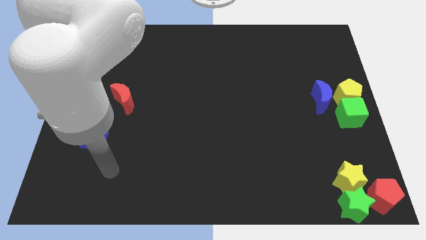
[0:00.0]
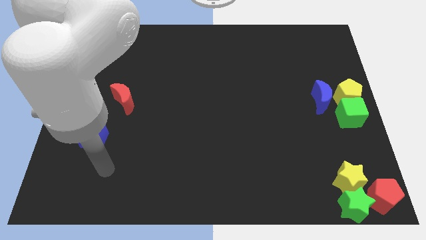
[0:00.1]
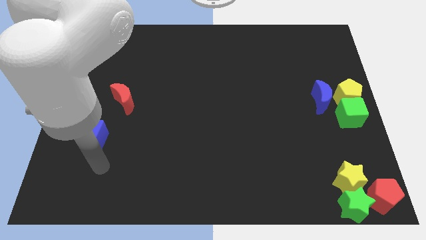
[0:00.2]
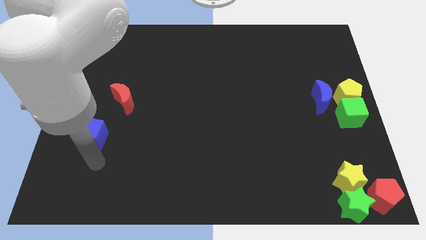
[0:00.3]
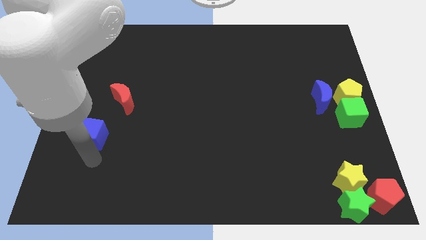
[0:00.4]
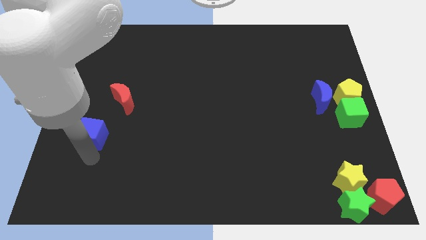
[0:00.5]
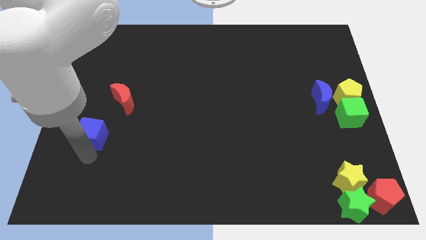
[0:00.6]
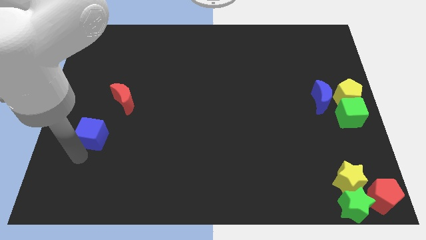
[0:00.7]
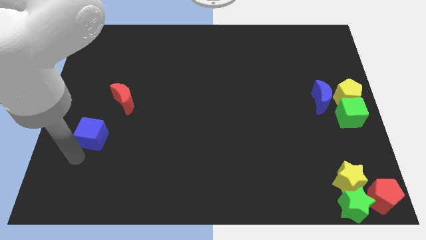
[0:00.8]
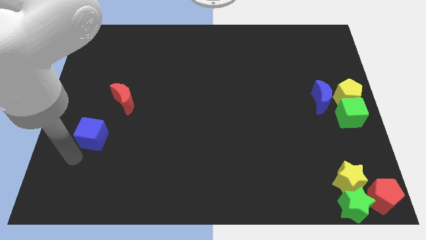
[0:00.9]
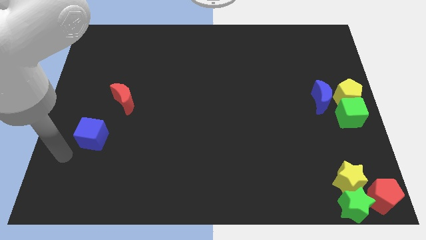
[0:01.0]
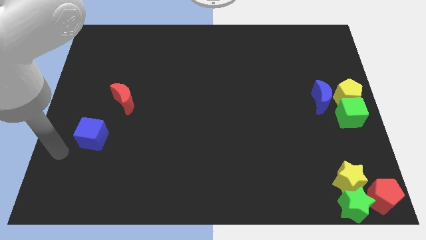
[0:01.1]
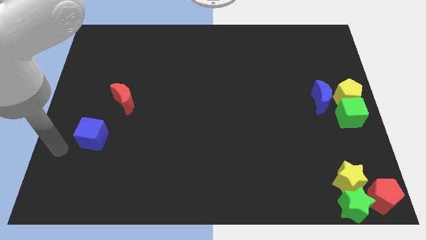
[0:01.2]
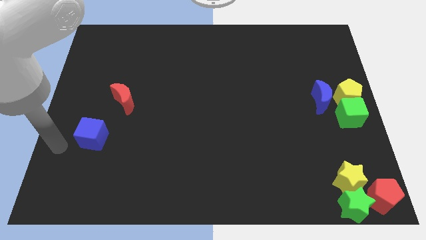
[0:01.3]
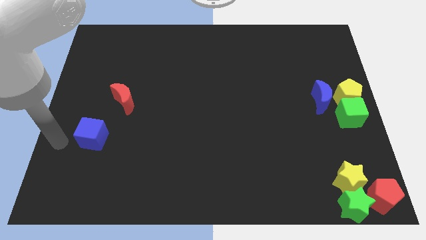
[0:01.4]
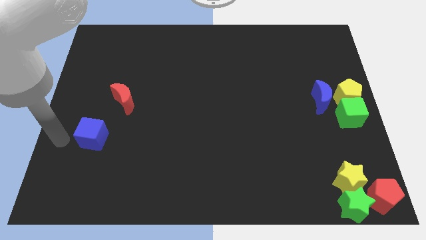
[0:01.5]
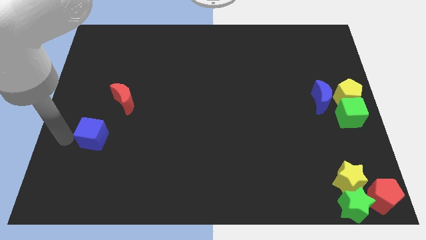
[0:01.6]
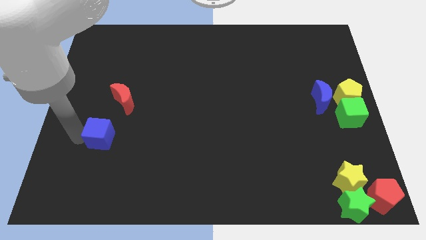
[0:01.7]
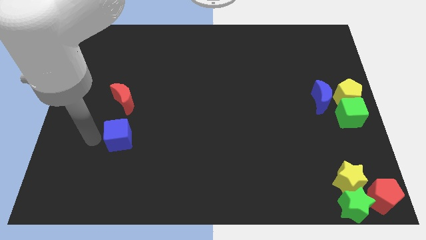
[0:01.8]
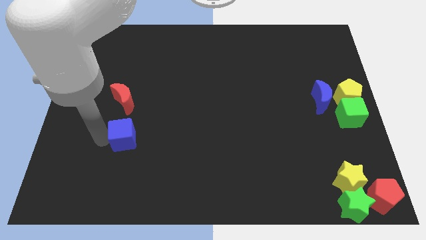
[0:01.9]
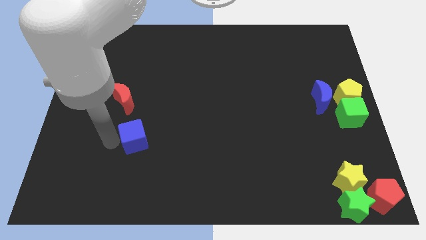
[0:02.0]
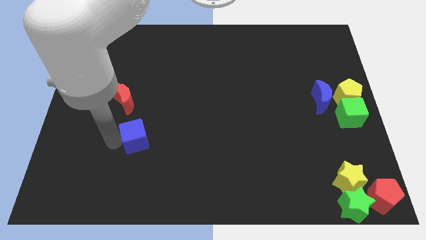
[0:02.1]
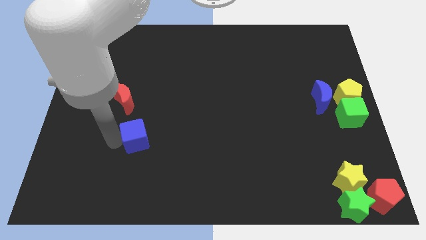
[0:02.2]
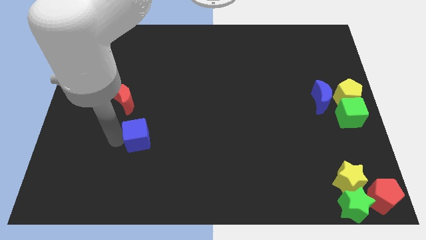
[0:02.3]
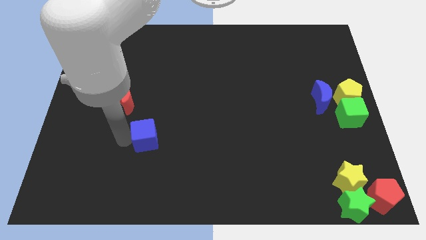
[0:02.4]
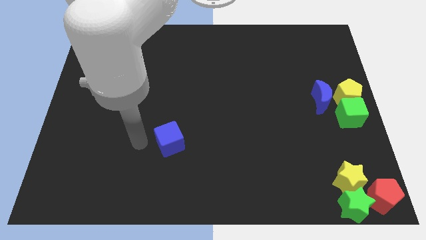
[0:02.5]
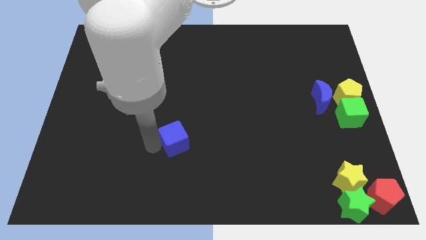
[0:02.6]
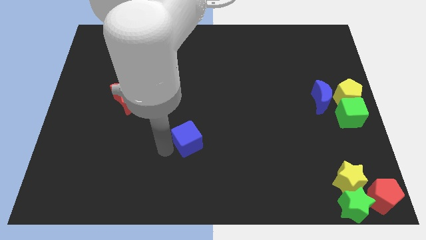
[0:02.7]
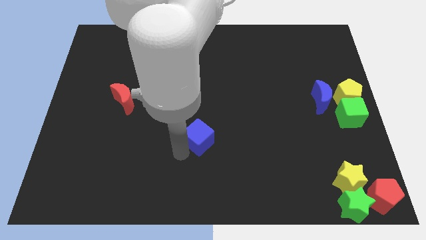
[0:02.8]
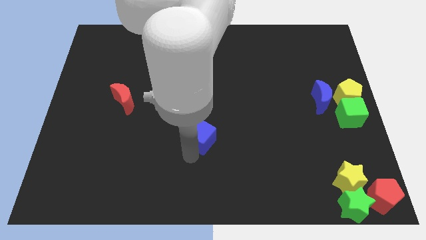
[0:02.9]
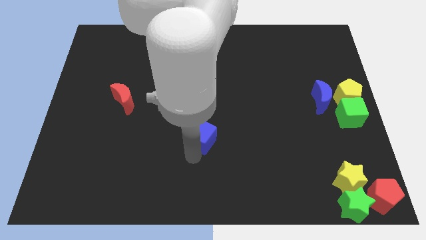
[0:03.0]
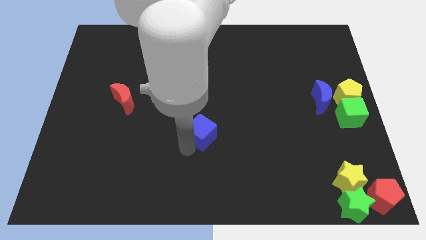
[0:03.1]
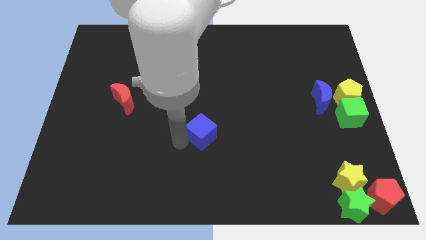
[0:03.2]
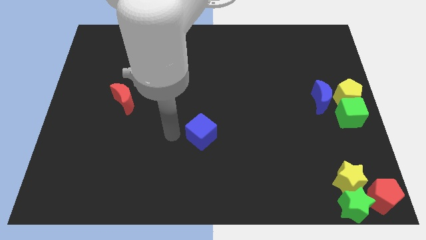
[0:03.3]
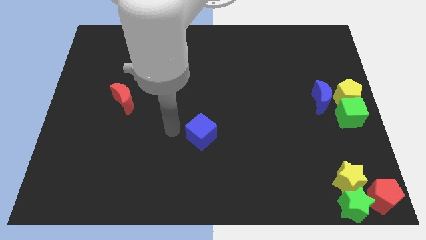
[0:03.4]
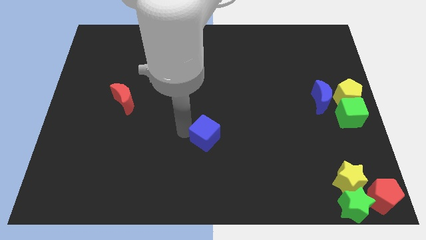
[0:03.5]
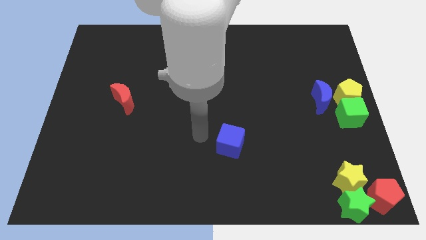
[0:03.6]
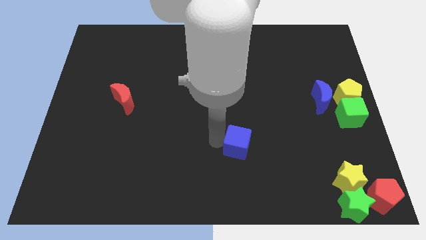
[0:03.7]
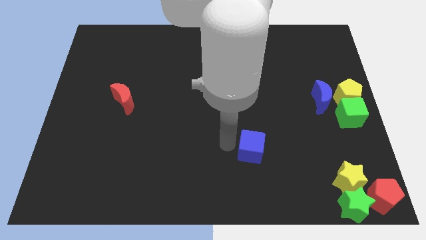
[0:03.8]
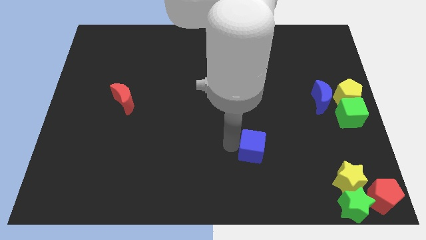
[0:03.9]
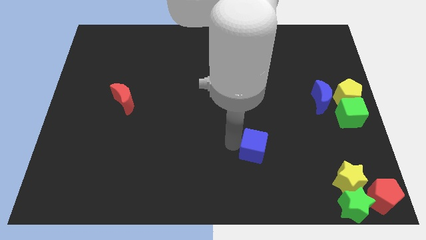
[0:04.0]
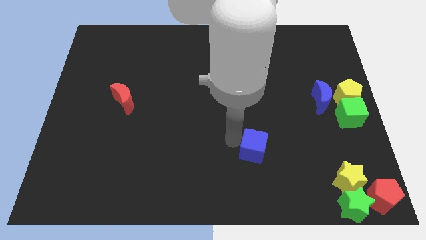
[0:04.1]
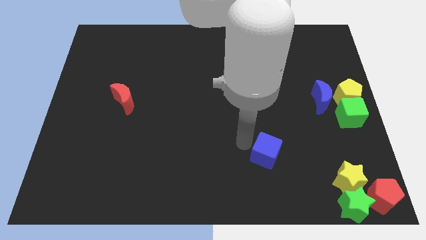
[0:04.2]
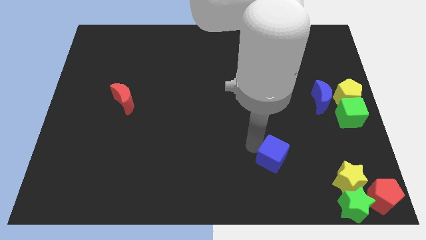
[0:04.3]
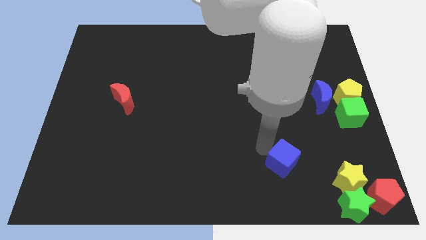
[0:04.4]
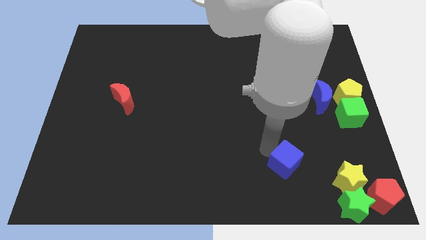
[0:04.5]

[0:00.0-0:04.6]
push the blue cube towards the top left side of the yellow star

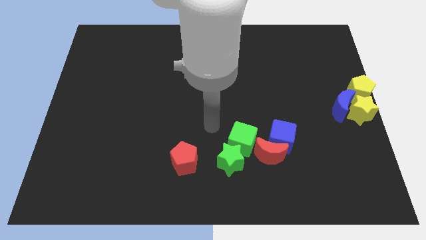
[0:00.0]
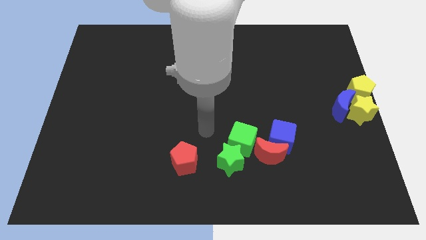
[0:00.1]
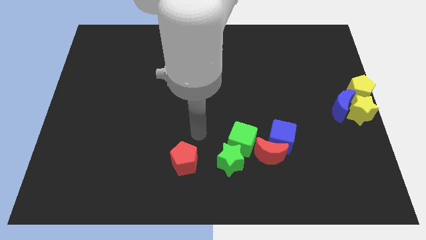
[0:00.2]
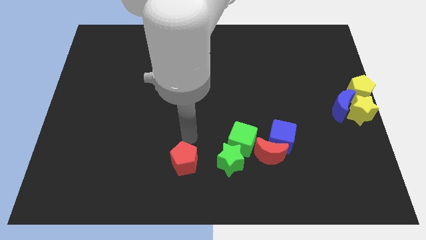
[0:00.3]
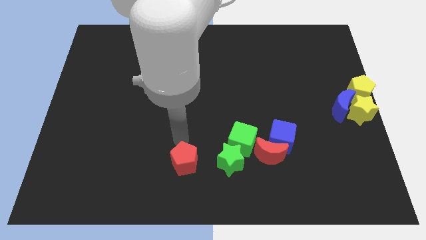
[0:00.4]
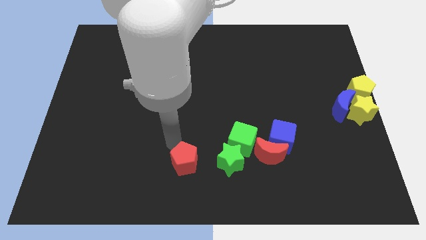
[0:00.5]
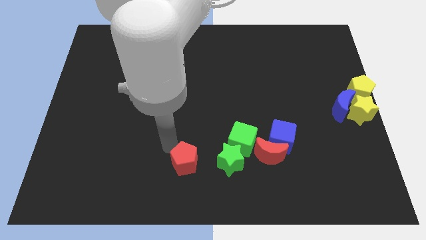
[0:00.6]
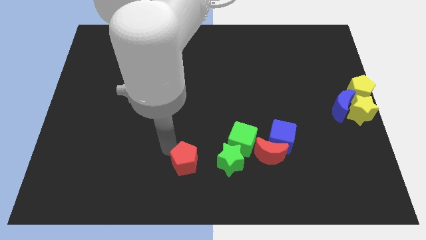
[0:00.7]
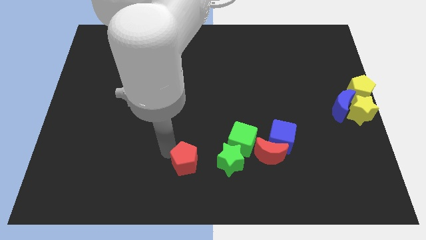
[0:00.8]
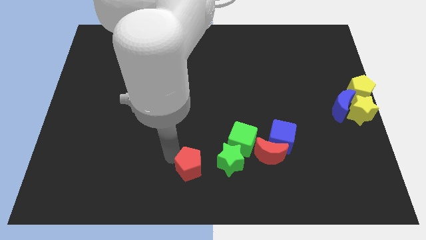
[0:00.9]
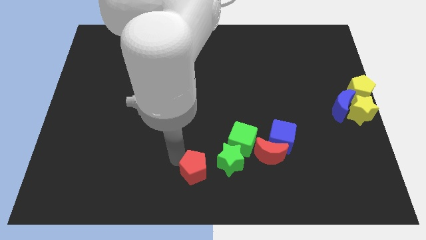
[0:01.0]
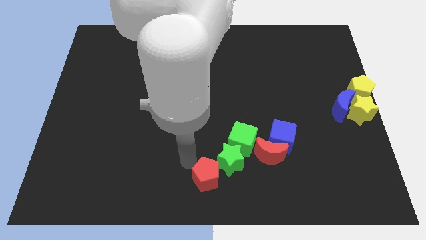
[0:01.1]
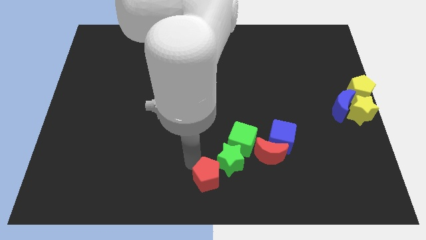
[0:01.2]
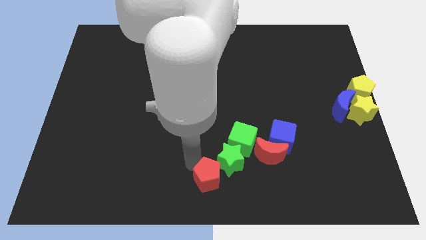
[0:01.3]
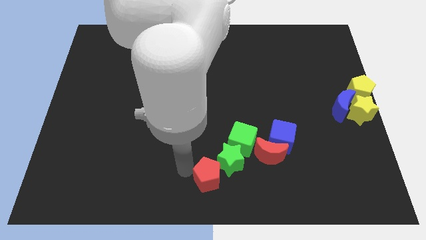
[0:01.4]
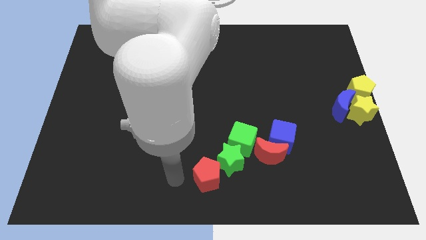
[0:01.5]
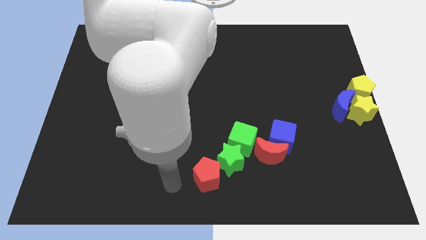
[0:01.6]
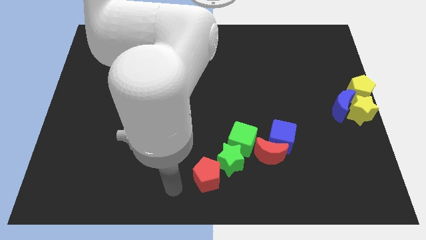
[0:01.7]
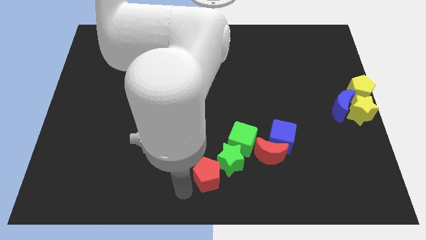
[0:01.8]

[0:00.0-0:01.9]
move the red pentagon diagonal to the green star

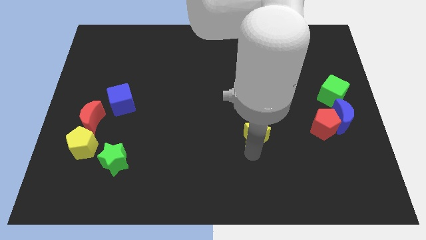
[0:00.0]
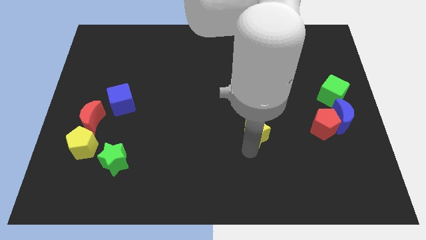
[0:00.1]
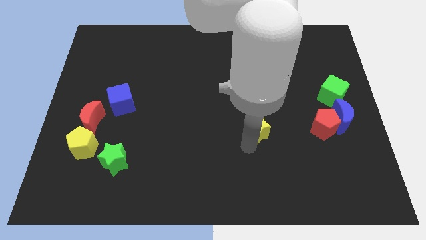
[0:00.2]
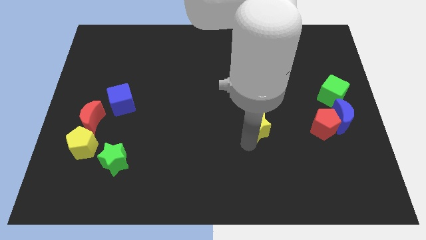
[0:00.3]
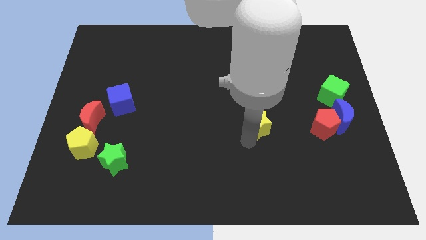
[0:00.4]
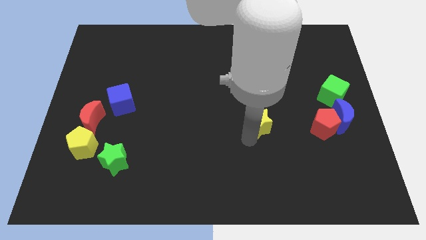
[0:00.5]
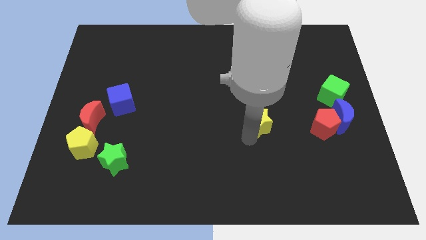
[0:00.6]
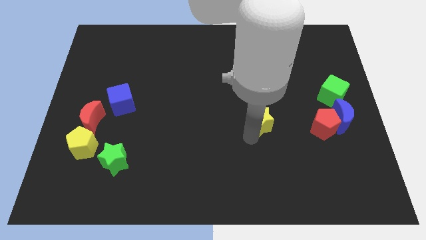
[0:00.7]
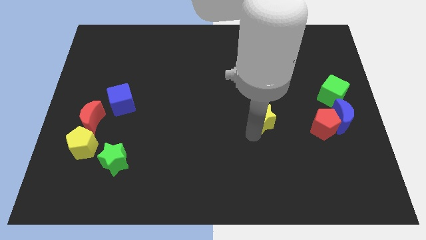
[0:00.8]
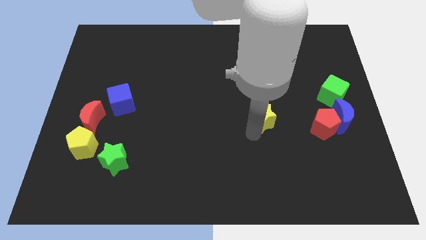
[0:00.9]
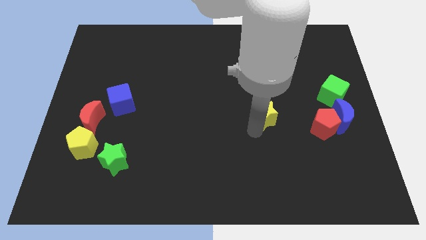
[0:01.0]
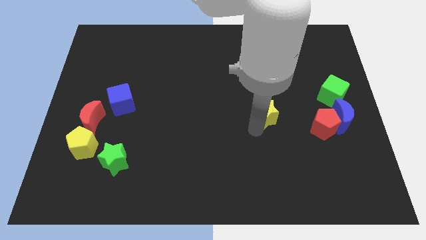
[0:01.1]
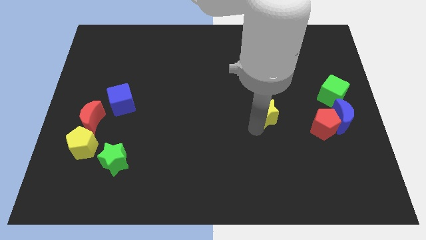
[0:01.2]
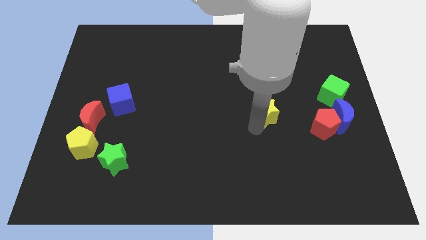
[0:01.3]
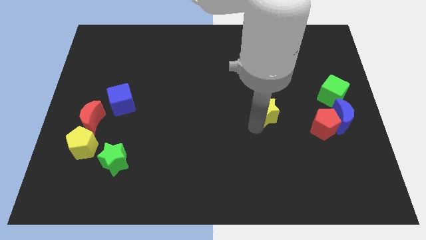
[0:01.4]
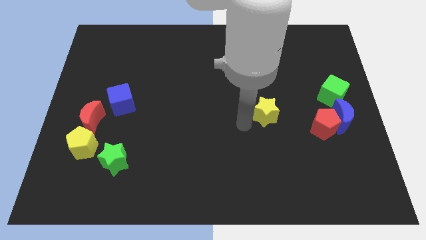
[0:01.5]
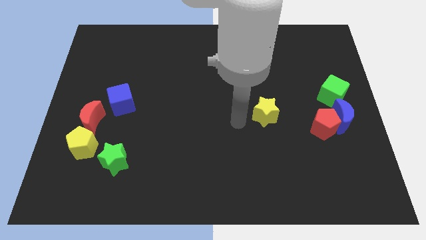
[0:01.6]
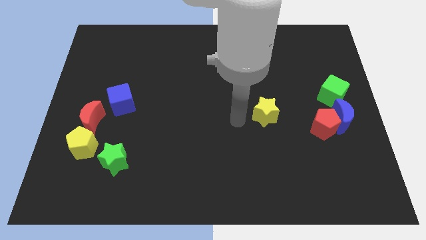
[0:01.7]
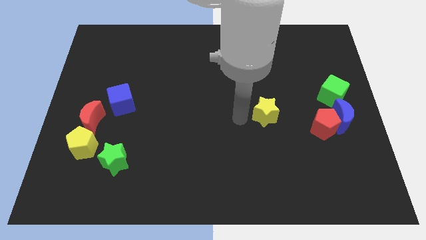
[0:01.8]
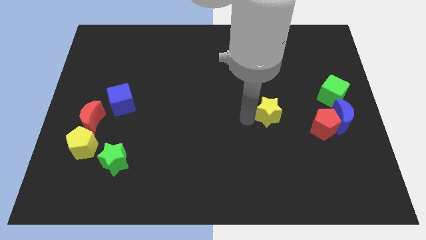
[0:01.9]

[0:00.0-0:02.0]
place the yellow star to the left of red pentagon

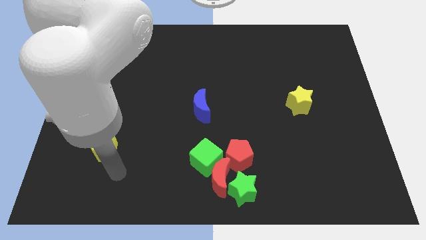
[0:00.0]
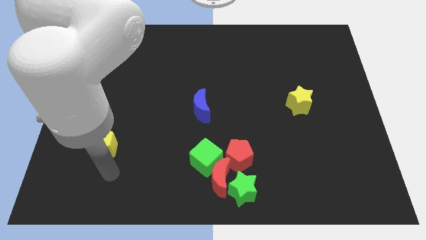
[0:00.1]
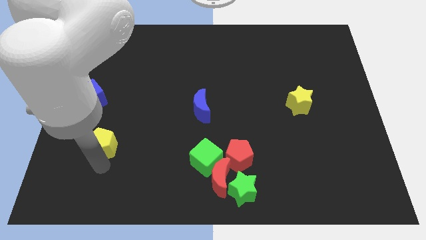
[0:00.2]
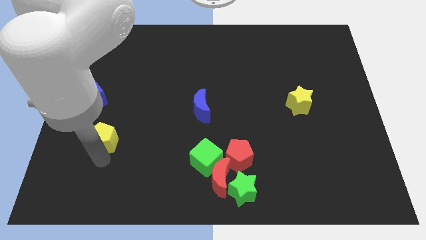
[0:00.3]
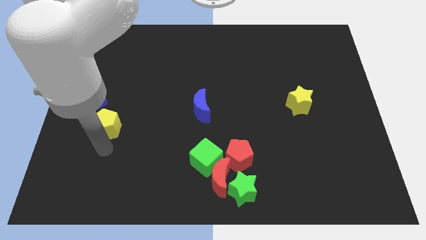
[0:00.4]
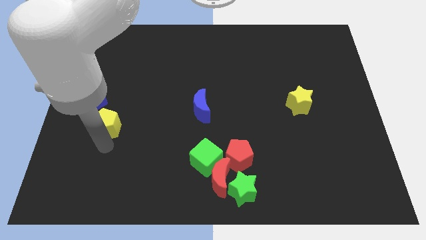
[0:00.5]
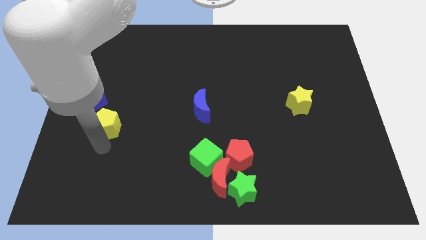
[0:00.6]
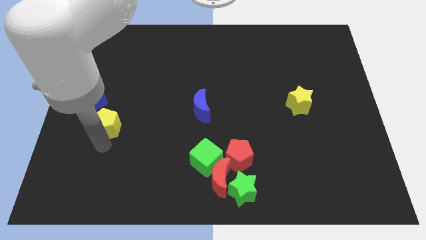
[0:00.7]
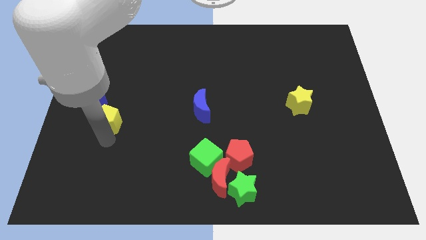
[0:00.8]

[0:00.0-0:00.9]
move pentagon slightly up
